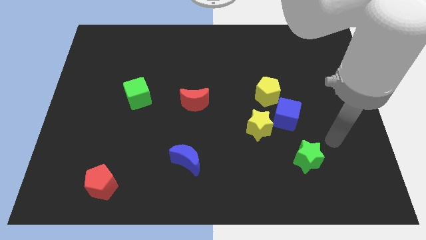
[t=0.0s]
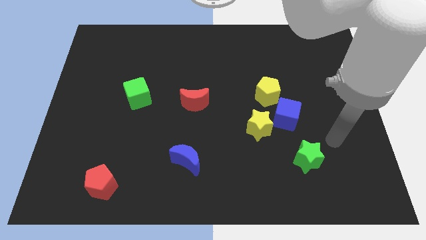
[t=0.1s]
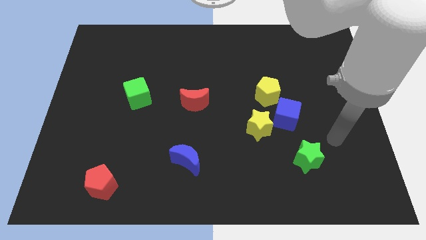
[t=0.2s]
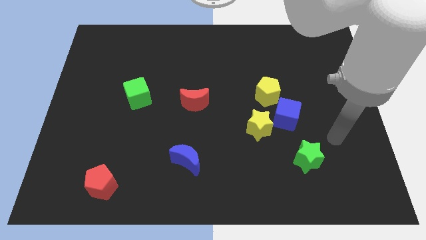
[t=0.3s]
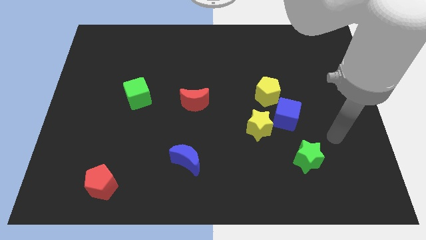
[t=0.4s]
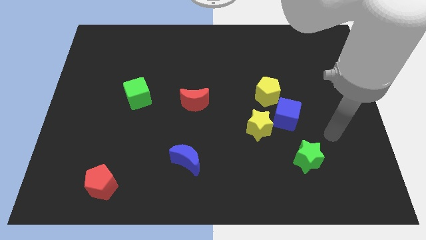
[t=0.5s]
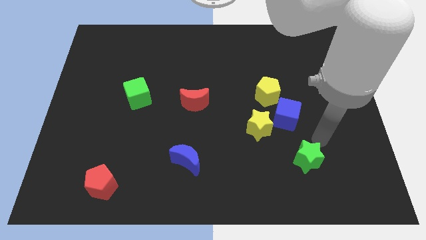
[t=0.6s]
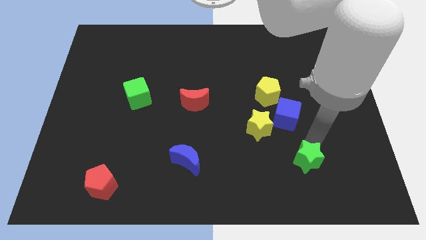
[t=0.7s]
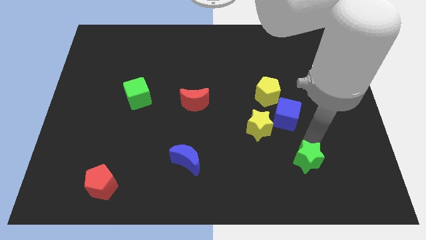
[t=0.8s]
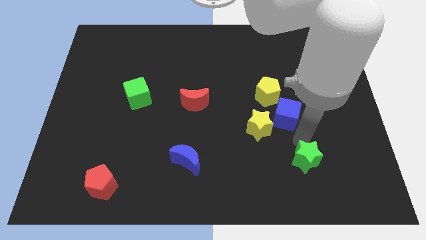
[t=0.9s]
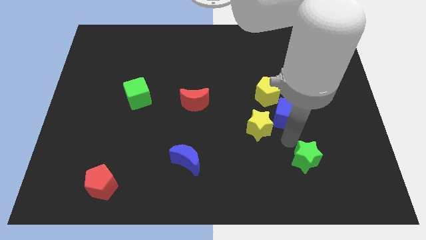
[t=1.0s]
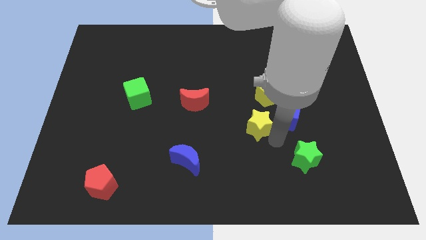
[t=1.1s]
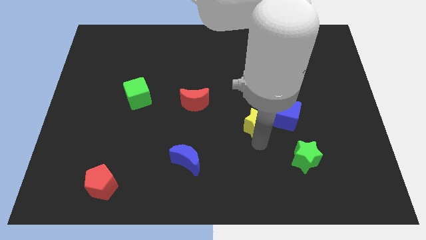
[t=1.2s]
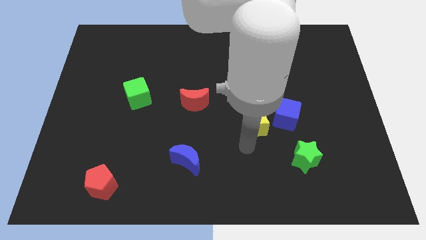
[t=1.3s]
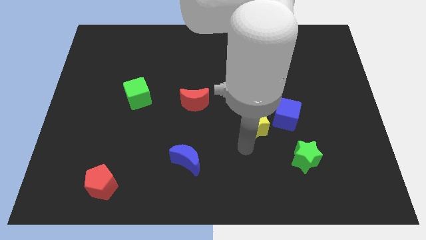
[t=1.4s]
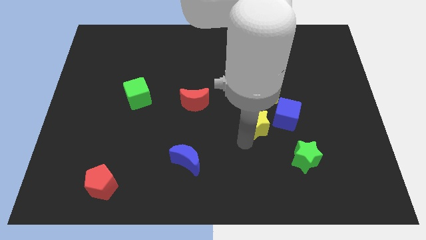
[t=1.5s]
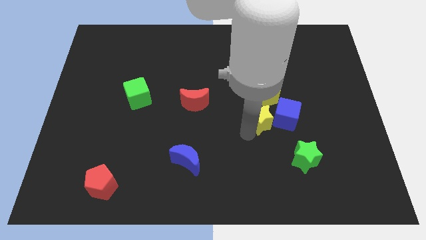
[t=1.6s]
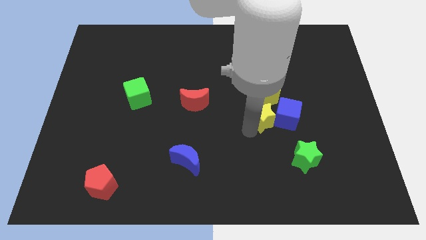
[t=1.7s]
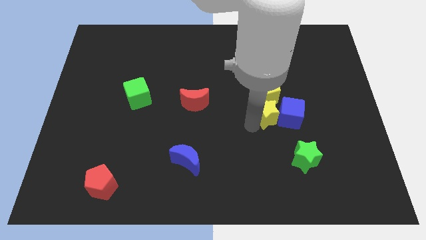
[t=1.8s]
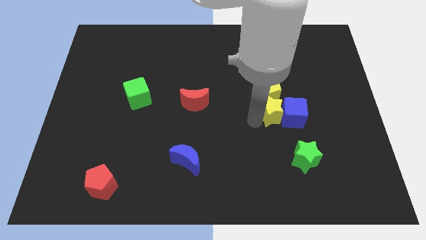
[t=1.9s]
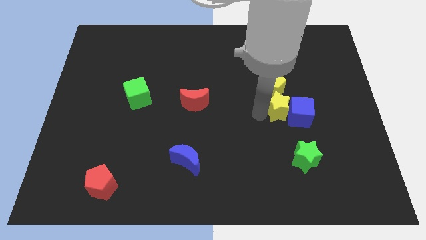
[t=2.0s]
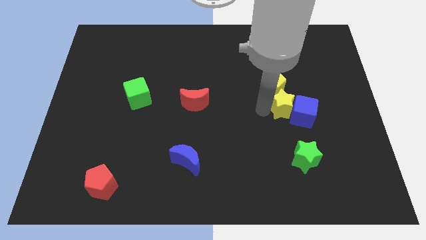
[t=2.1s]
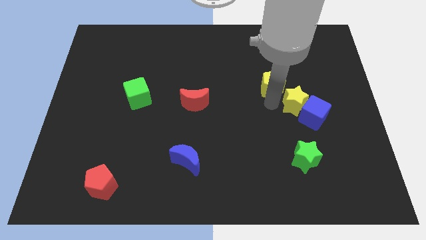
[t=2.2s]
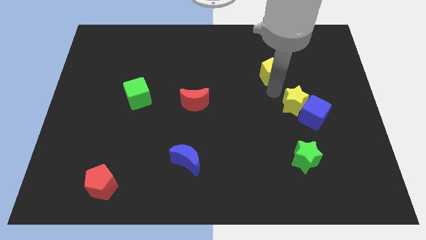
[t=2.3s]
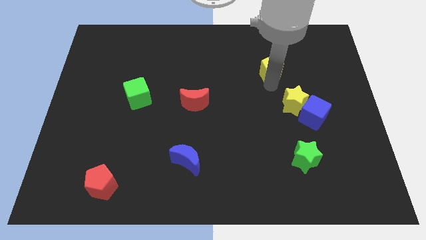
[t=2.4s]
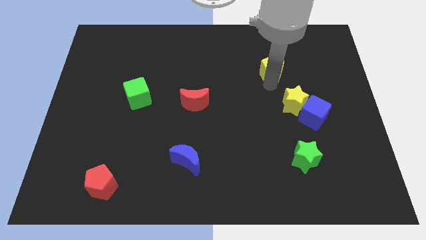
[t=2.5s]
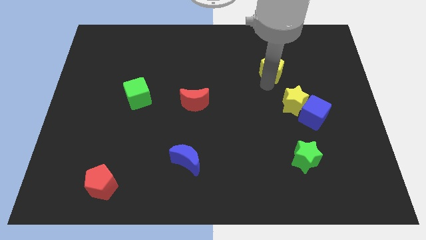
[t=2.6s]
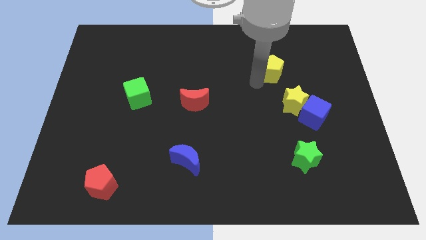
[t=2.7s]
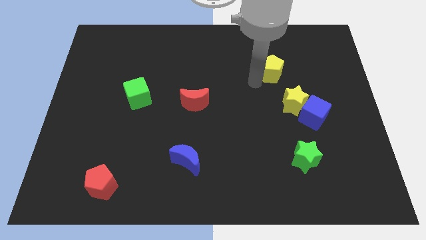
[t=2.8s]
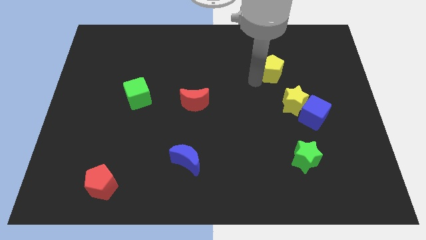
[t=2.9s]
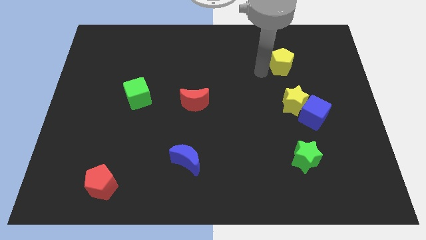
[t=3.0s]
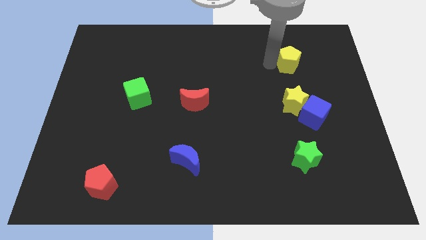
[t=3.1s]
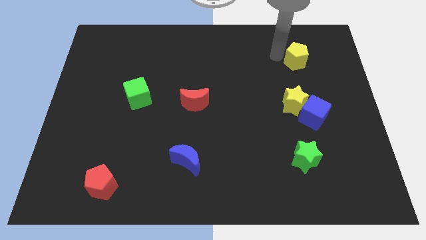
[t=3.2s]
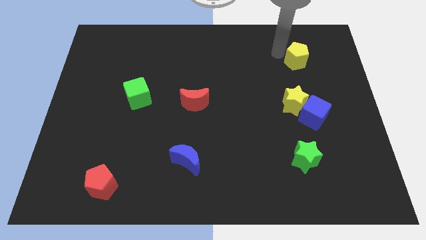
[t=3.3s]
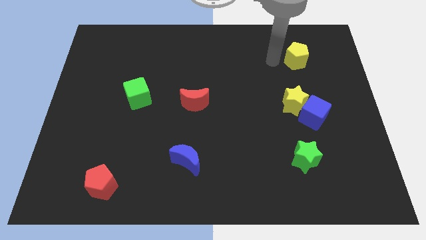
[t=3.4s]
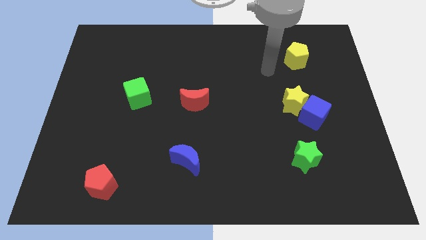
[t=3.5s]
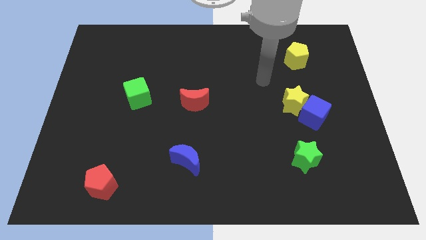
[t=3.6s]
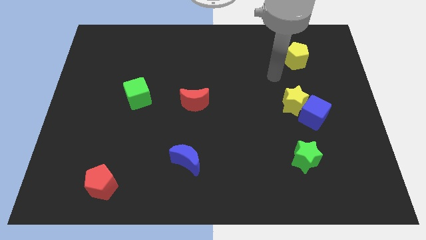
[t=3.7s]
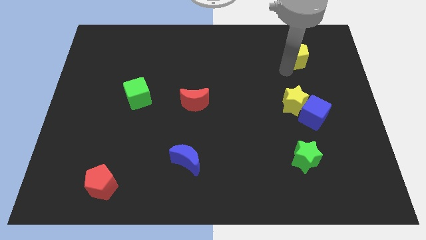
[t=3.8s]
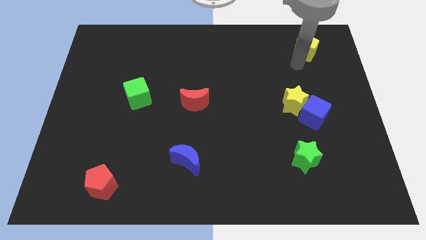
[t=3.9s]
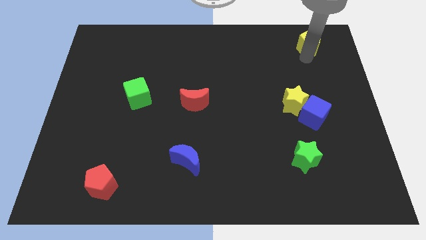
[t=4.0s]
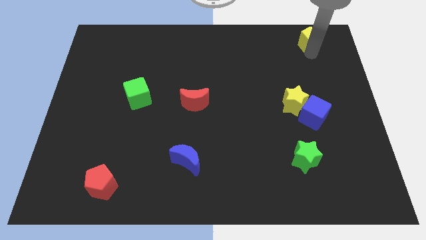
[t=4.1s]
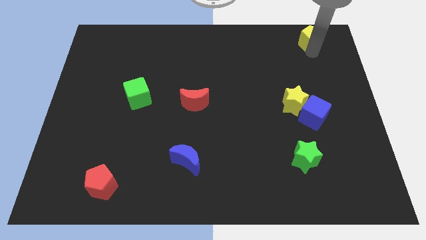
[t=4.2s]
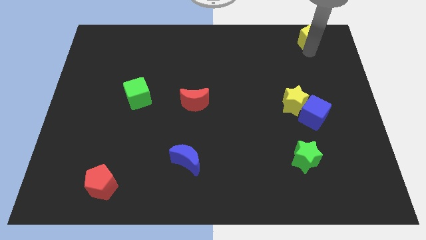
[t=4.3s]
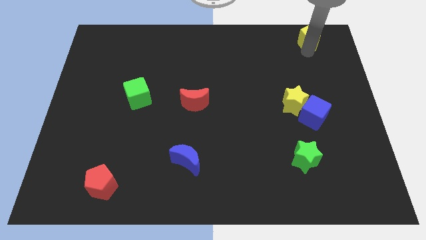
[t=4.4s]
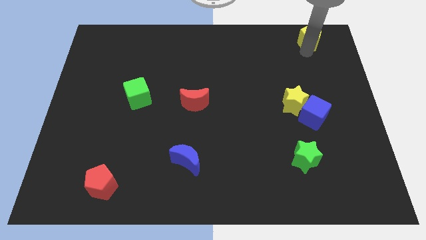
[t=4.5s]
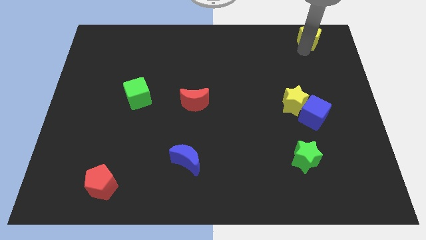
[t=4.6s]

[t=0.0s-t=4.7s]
move the yellow pentagon towards the top right of the board

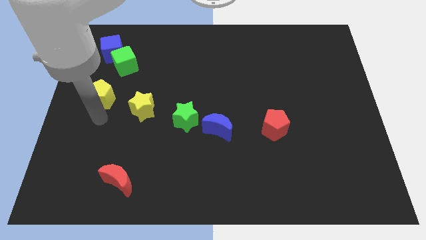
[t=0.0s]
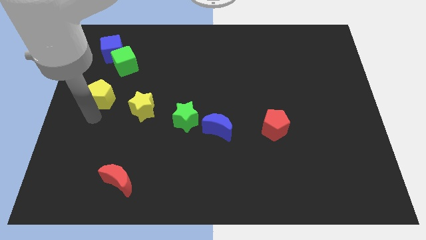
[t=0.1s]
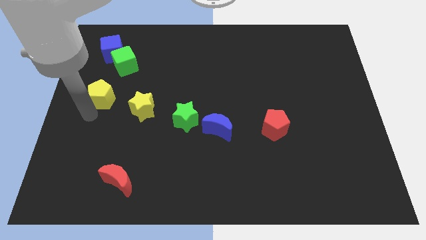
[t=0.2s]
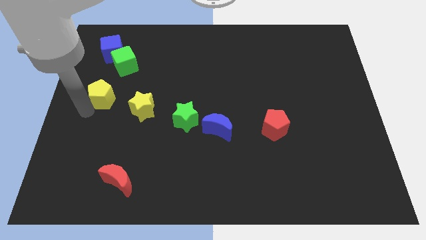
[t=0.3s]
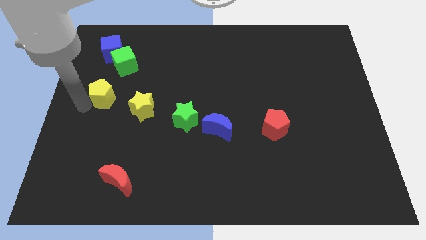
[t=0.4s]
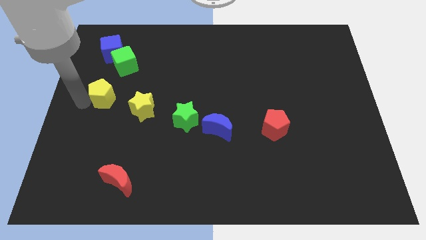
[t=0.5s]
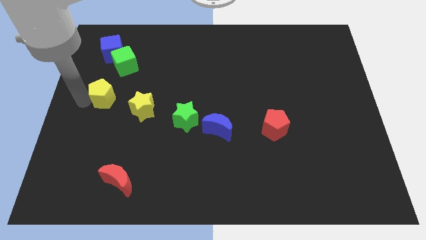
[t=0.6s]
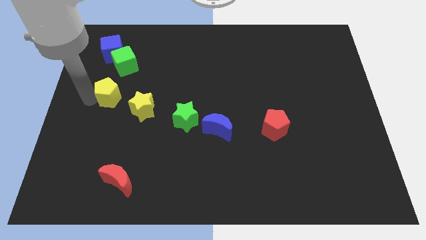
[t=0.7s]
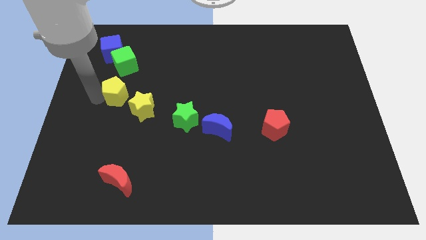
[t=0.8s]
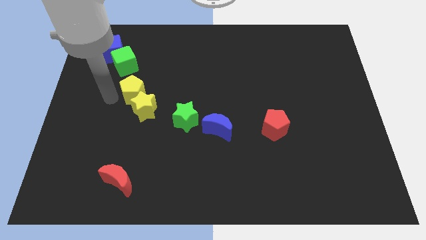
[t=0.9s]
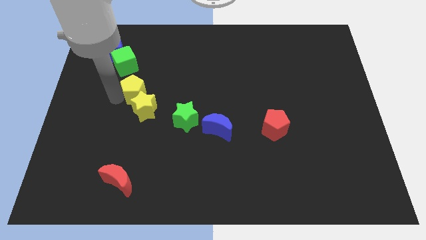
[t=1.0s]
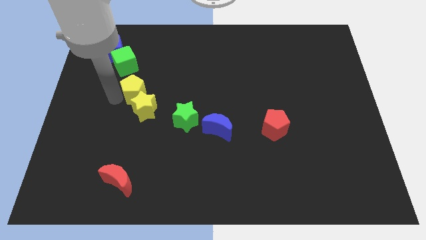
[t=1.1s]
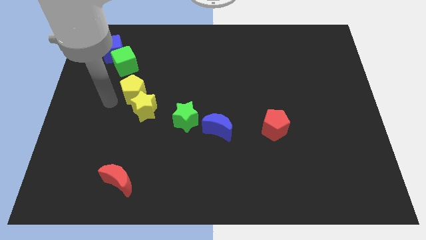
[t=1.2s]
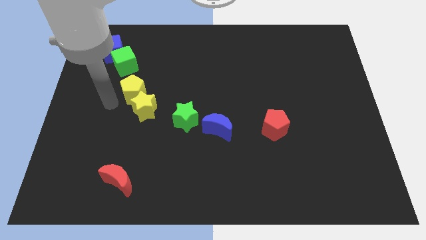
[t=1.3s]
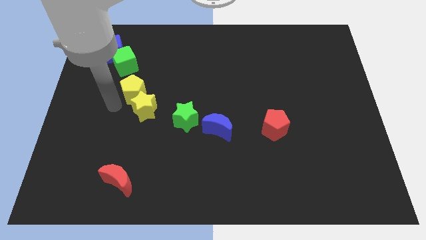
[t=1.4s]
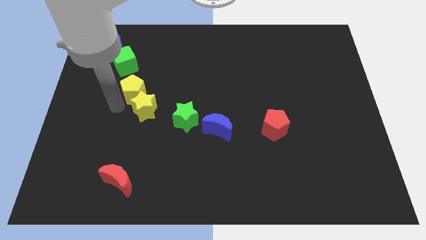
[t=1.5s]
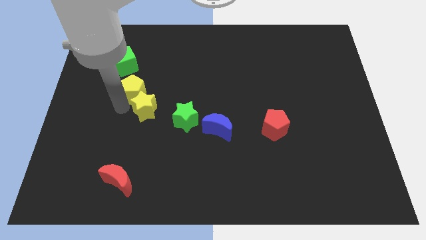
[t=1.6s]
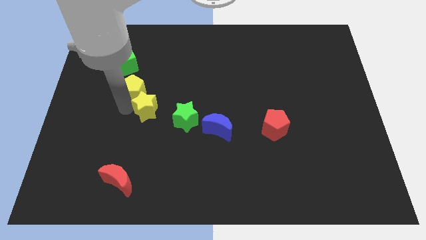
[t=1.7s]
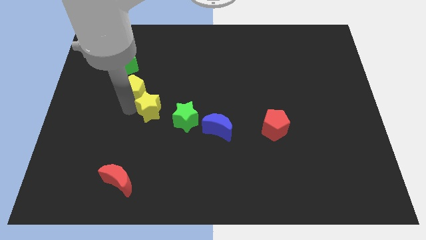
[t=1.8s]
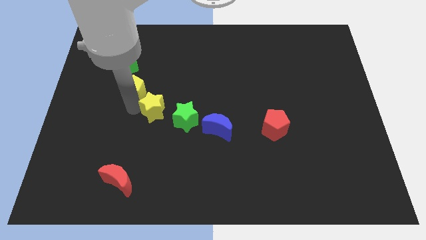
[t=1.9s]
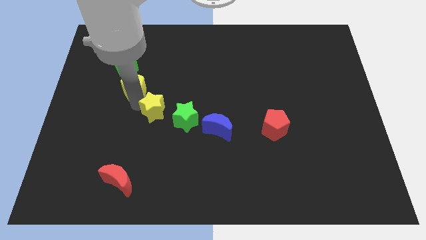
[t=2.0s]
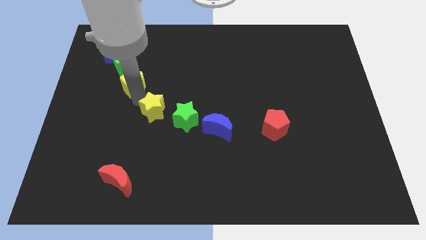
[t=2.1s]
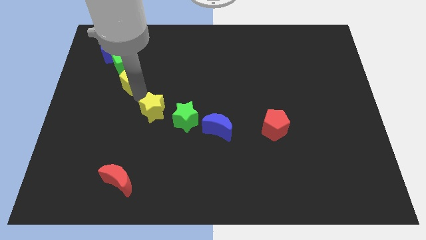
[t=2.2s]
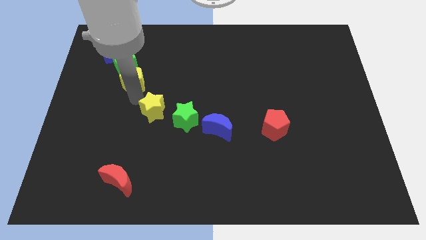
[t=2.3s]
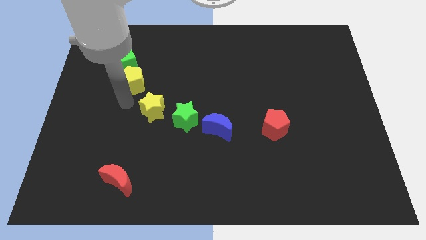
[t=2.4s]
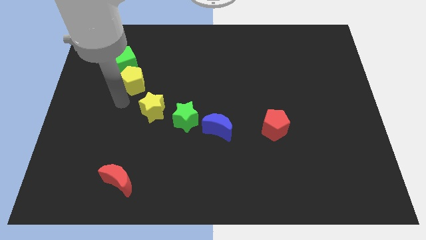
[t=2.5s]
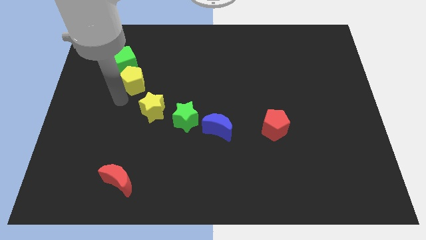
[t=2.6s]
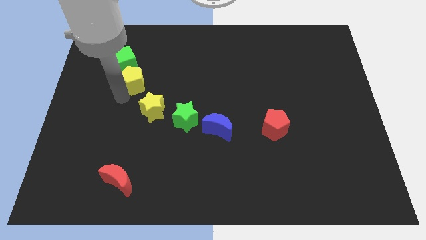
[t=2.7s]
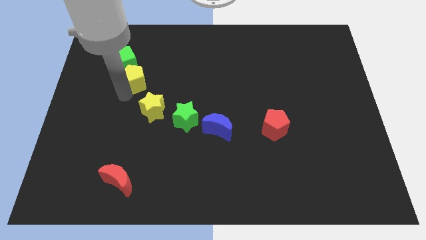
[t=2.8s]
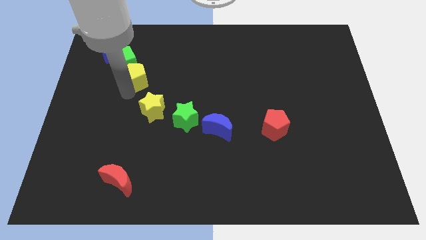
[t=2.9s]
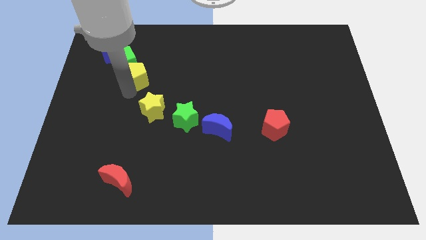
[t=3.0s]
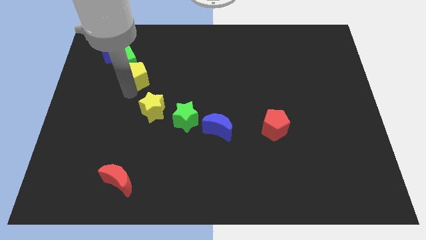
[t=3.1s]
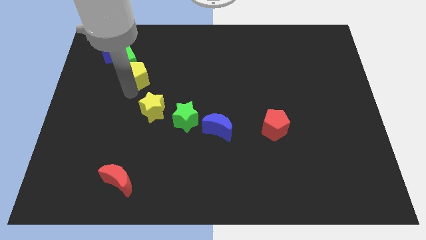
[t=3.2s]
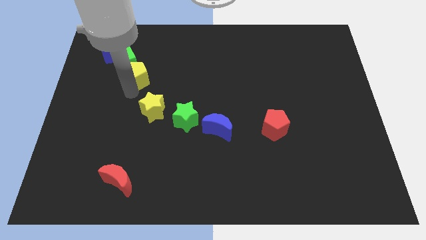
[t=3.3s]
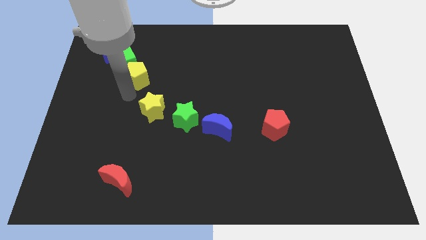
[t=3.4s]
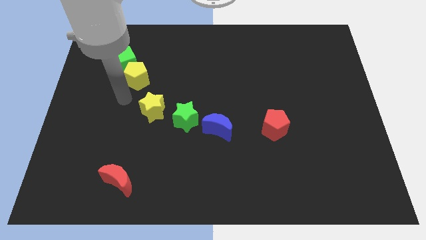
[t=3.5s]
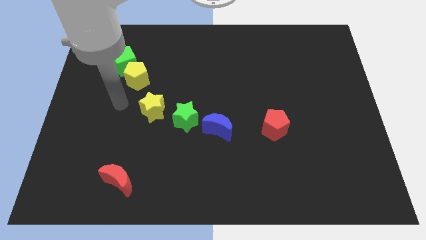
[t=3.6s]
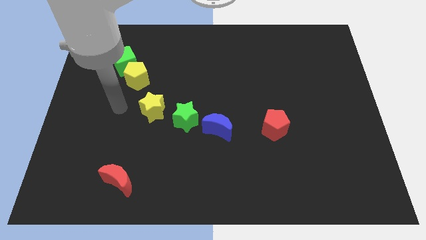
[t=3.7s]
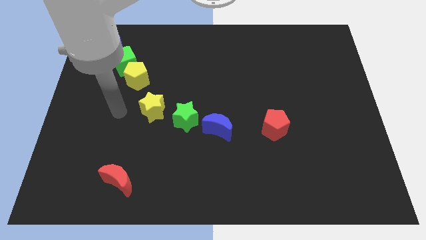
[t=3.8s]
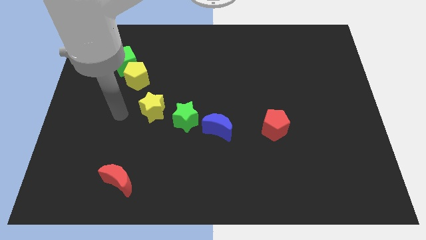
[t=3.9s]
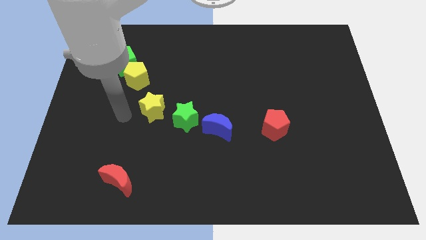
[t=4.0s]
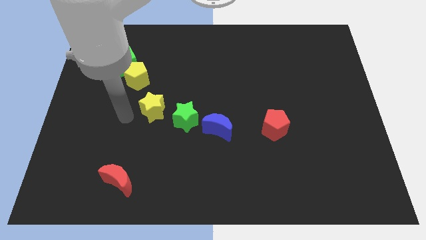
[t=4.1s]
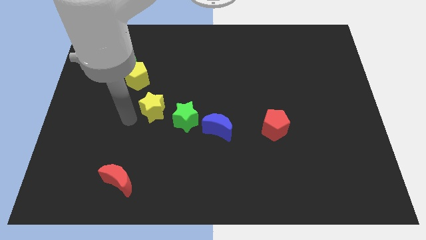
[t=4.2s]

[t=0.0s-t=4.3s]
push the yellow pentagon into the green cube
